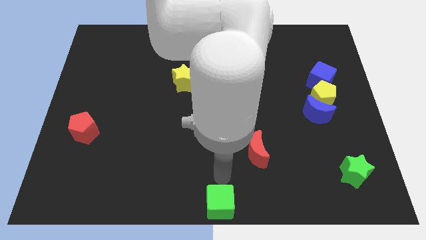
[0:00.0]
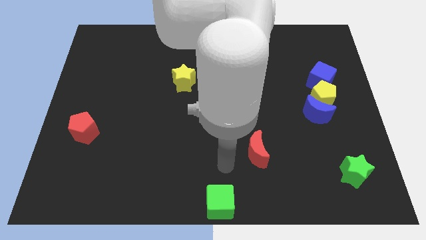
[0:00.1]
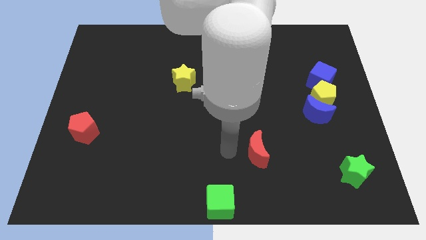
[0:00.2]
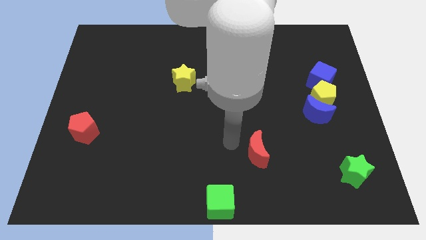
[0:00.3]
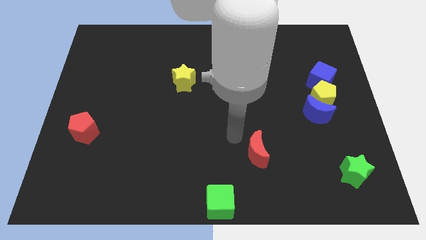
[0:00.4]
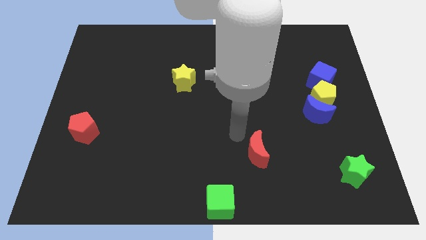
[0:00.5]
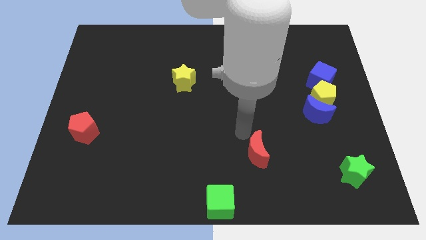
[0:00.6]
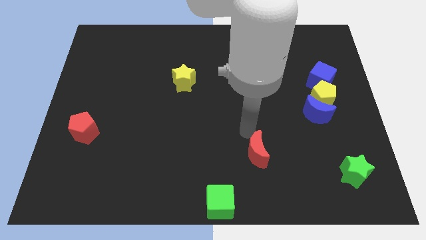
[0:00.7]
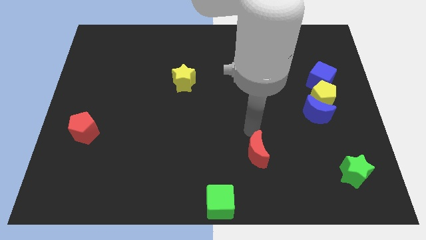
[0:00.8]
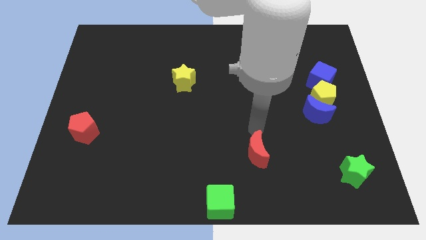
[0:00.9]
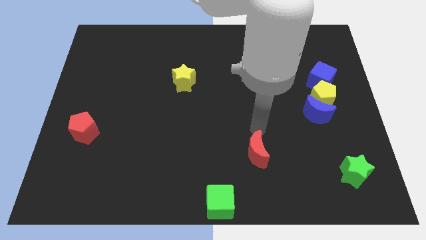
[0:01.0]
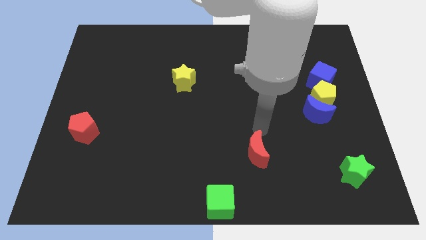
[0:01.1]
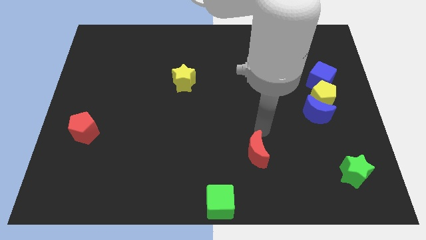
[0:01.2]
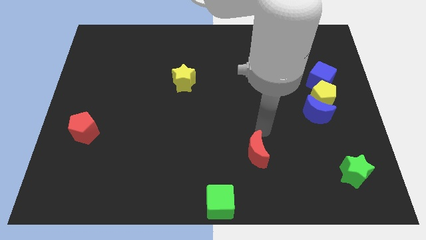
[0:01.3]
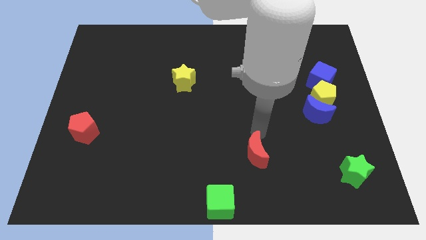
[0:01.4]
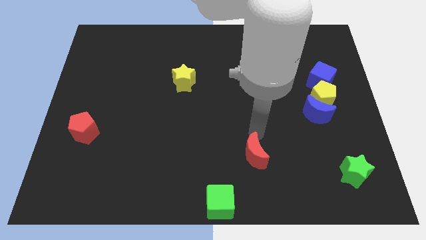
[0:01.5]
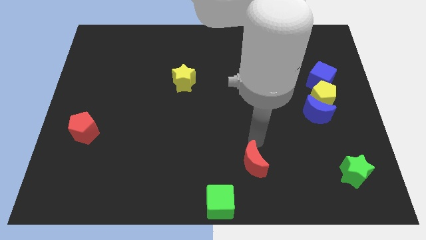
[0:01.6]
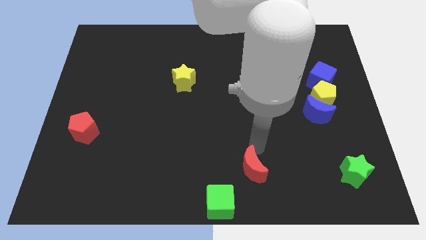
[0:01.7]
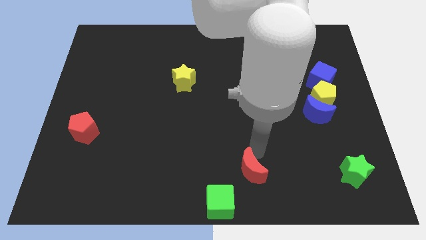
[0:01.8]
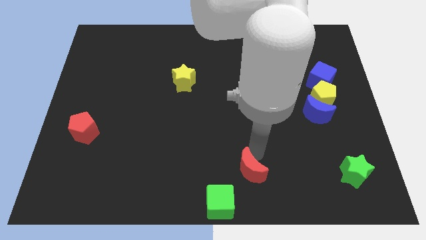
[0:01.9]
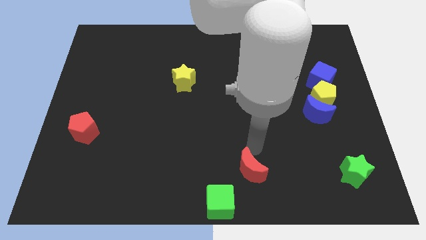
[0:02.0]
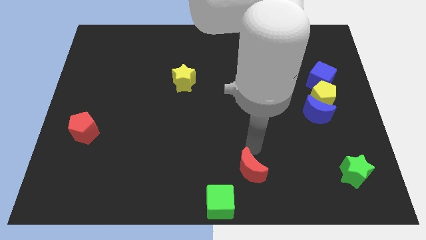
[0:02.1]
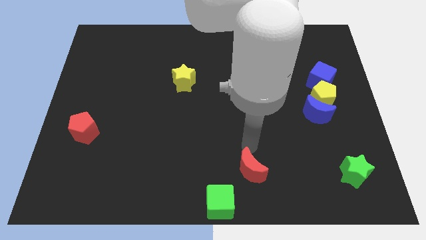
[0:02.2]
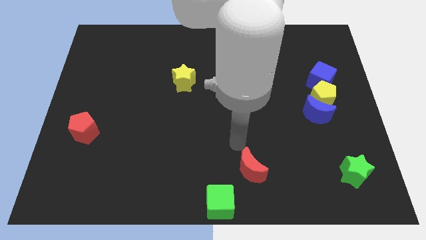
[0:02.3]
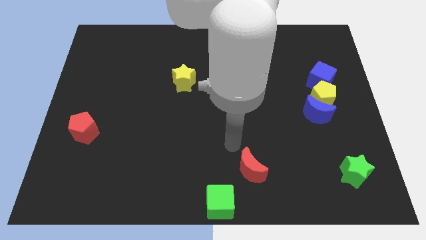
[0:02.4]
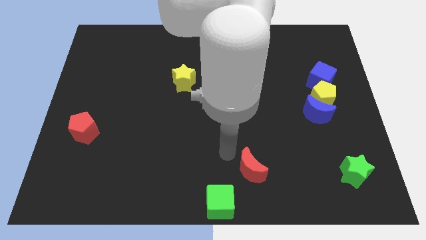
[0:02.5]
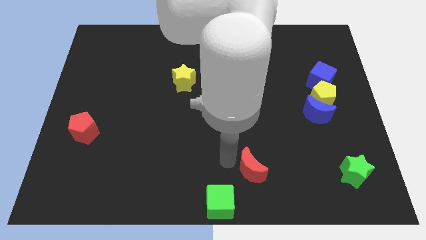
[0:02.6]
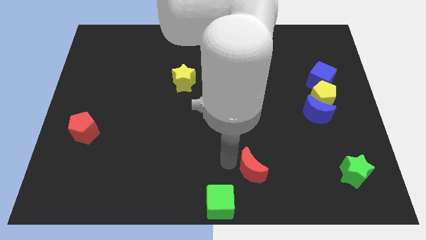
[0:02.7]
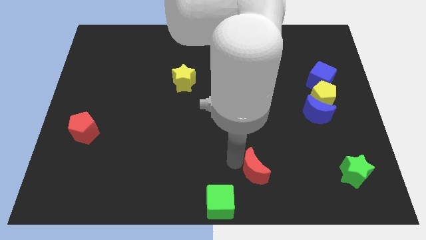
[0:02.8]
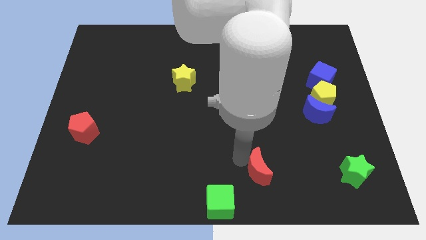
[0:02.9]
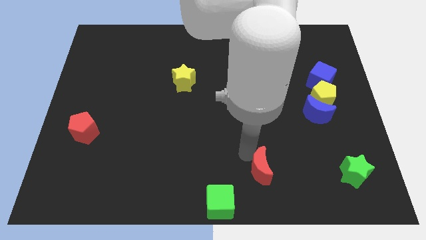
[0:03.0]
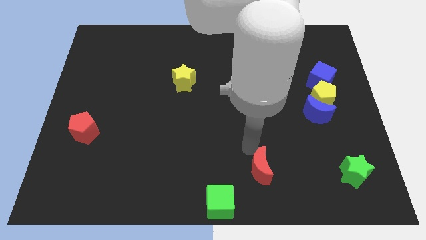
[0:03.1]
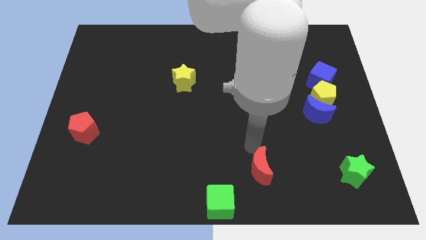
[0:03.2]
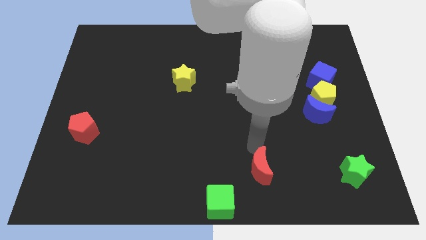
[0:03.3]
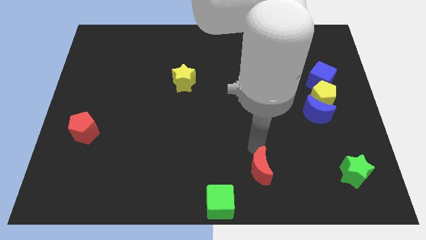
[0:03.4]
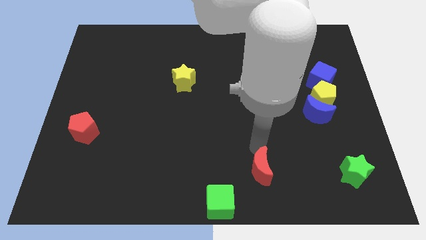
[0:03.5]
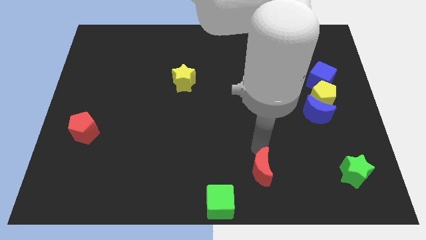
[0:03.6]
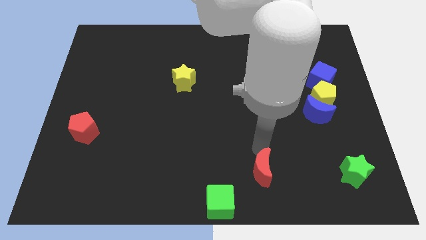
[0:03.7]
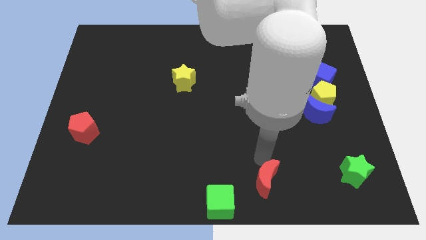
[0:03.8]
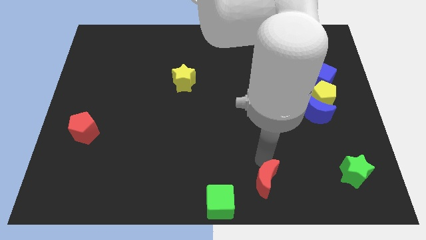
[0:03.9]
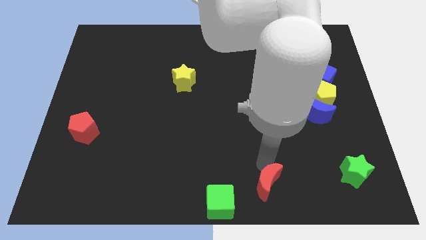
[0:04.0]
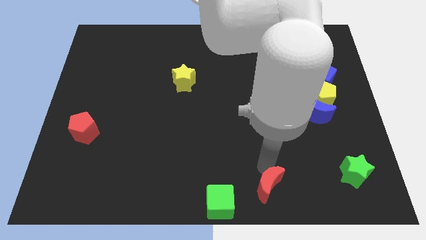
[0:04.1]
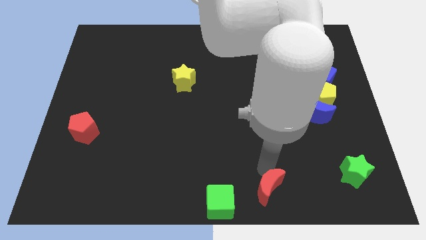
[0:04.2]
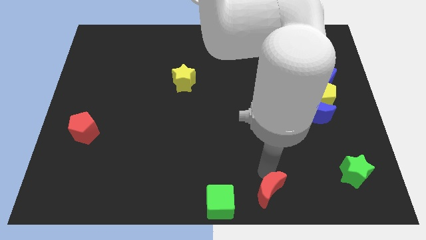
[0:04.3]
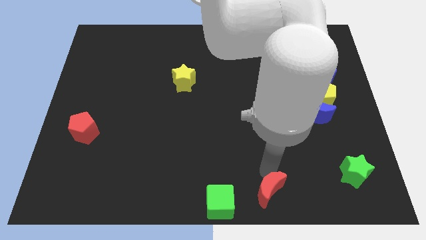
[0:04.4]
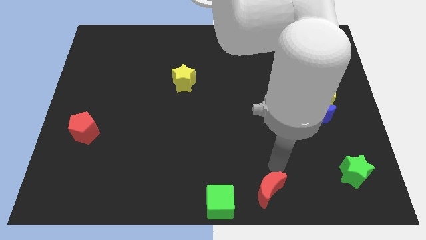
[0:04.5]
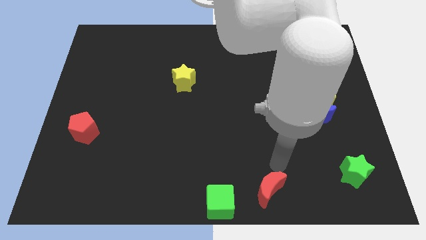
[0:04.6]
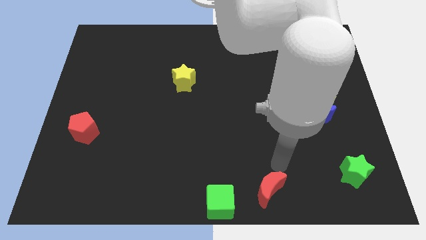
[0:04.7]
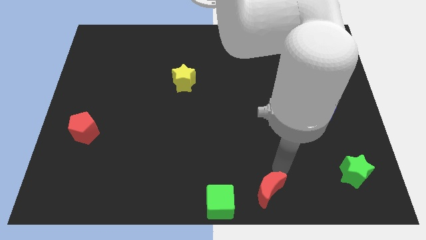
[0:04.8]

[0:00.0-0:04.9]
slide the red crescent towards the bottom center

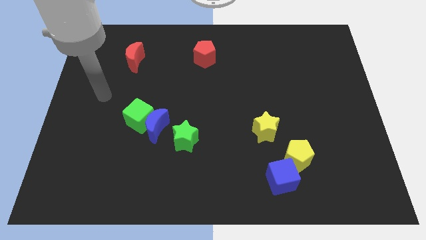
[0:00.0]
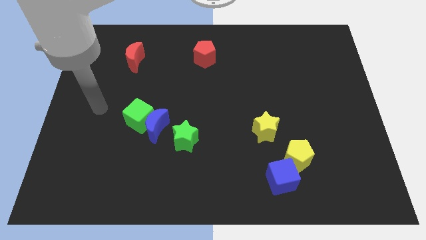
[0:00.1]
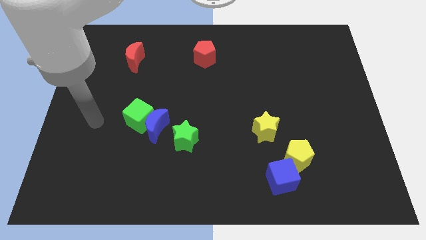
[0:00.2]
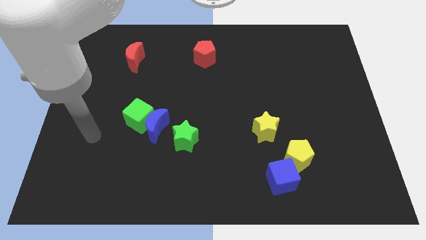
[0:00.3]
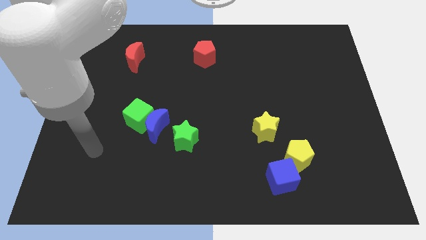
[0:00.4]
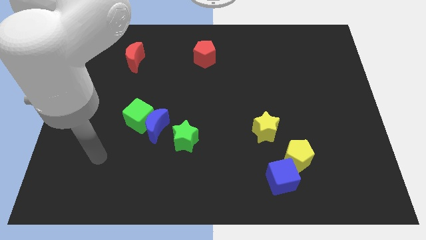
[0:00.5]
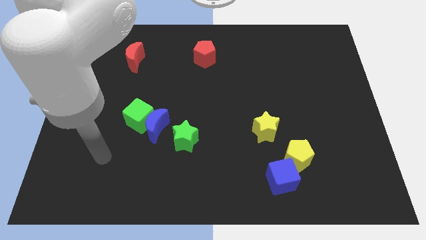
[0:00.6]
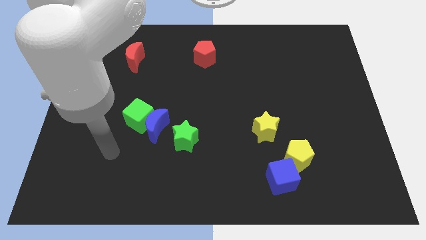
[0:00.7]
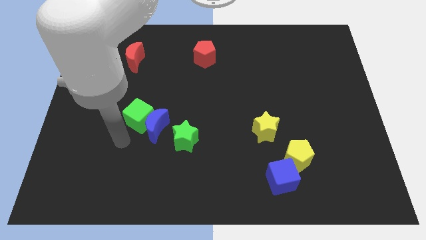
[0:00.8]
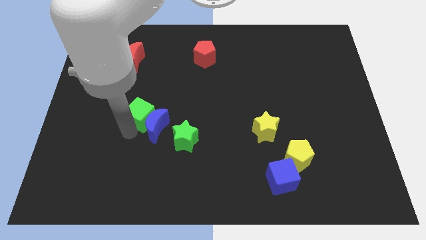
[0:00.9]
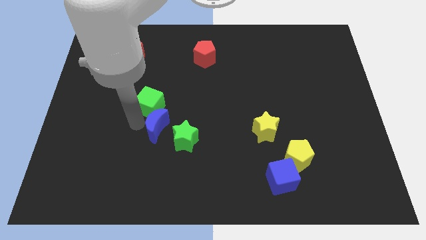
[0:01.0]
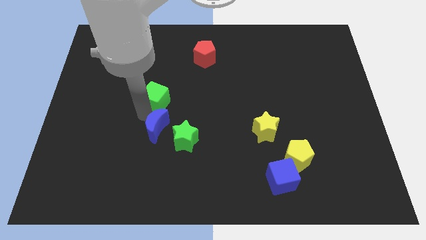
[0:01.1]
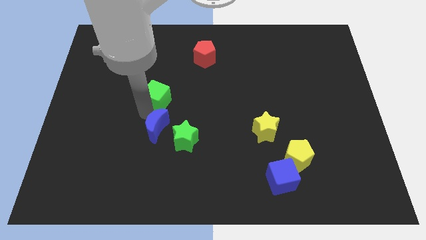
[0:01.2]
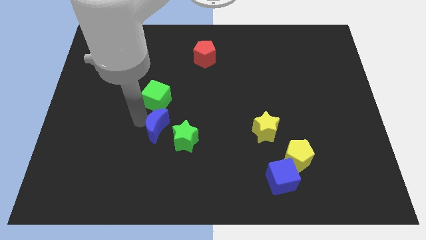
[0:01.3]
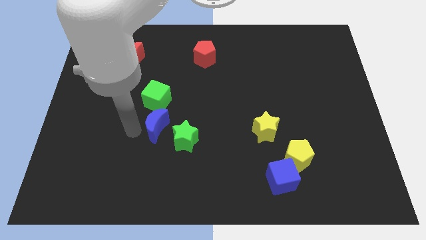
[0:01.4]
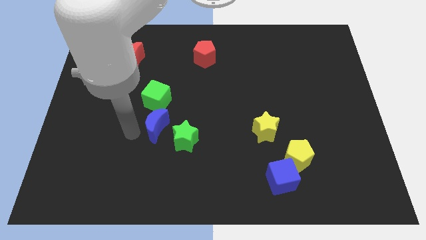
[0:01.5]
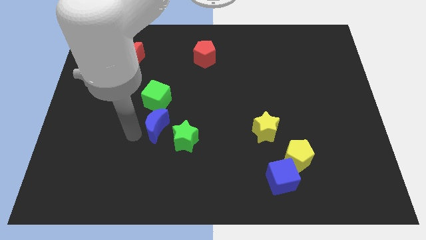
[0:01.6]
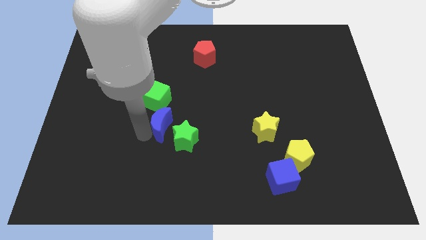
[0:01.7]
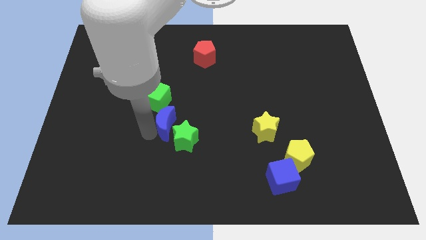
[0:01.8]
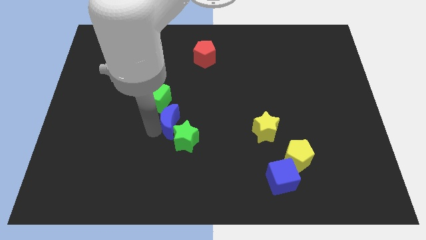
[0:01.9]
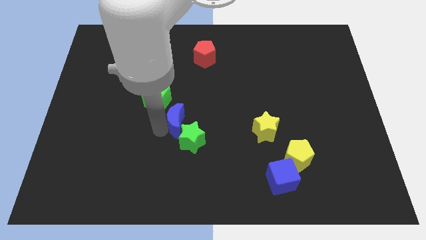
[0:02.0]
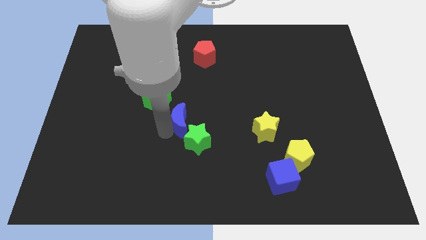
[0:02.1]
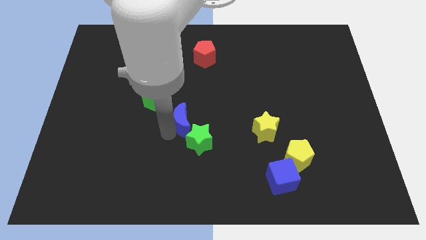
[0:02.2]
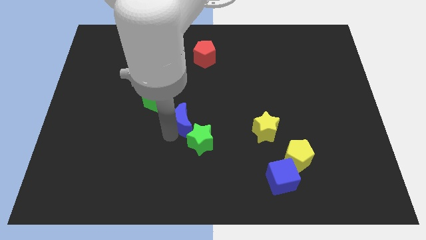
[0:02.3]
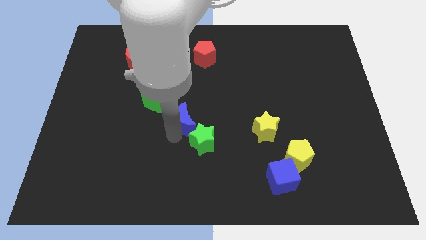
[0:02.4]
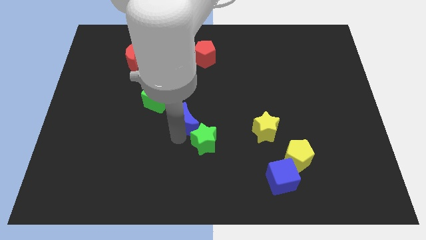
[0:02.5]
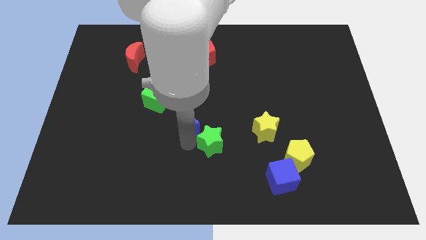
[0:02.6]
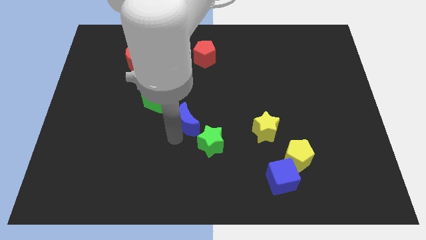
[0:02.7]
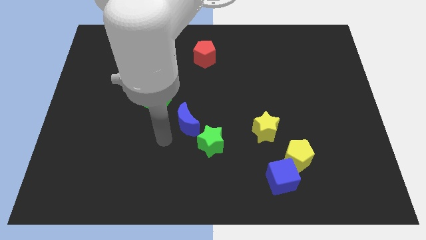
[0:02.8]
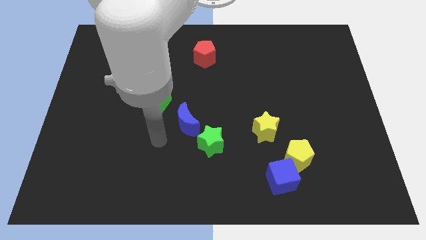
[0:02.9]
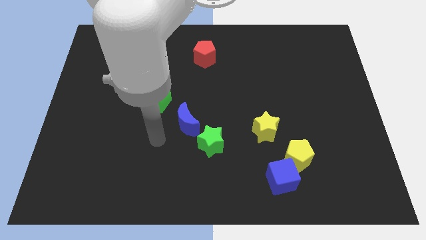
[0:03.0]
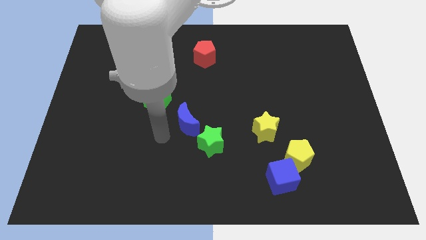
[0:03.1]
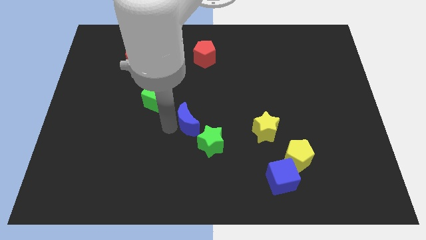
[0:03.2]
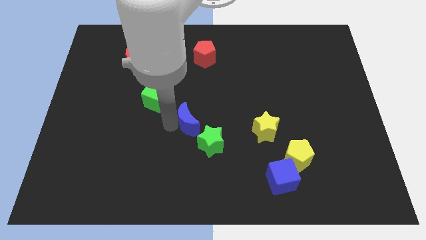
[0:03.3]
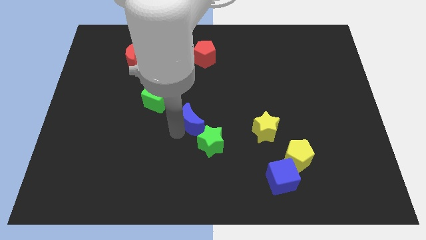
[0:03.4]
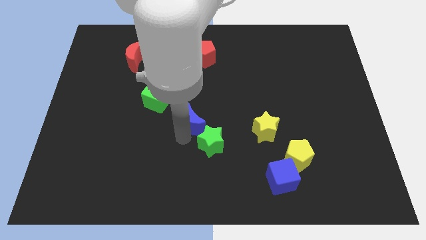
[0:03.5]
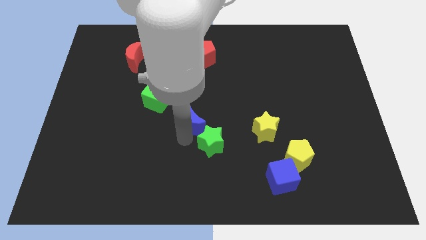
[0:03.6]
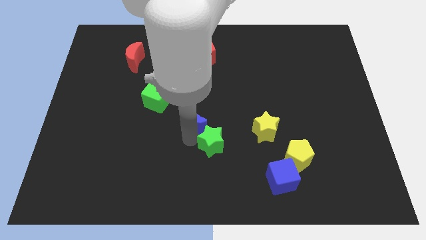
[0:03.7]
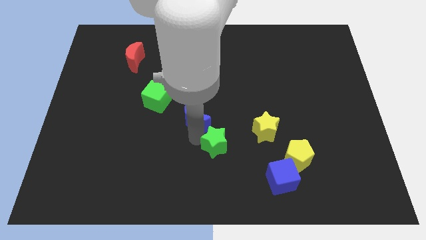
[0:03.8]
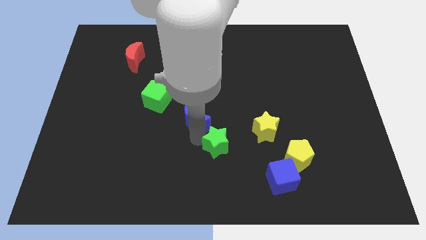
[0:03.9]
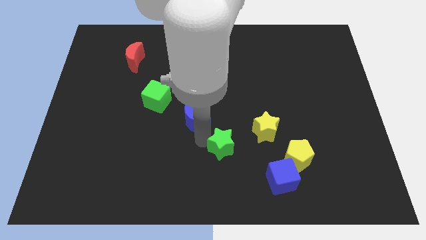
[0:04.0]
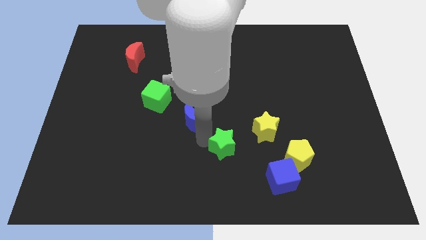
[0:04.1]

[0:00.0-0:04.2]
separate the green cube and blue crescent from each other
